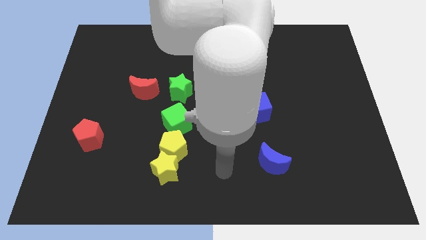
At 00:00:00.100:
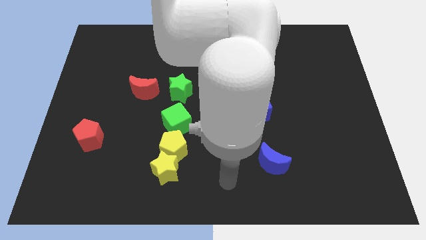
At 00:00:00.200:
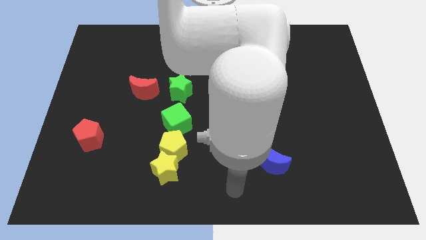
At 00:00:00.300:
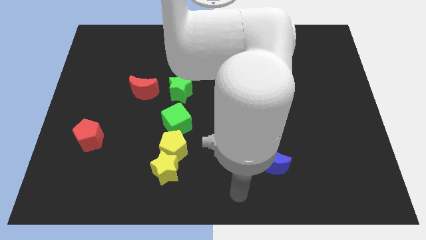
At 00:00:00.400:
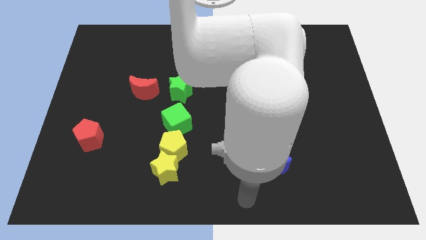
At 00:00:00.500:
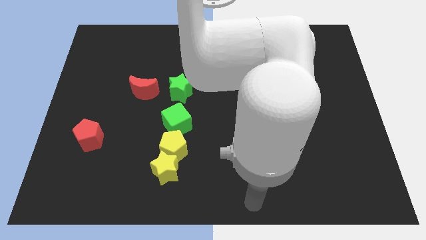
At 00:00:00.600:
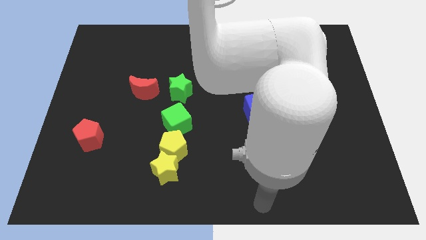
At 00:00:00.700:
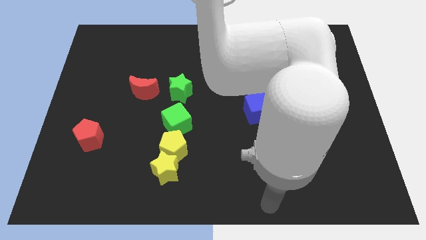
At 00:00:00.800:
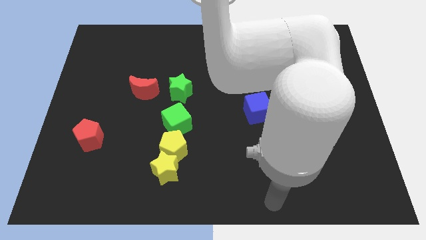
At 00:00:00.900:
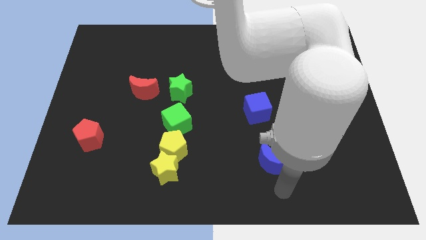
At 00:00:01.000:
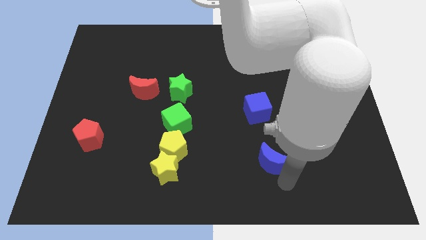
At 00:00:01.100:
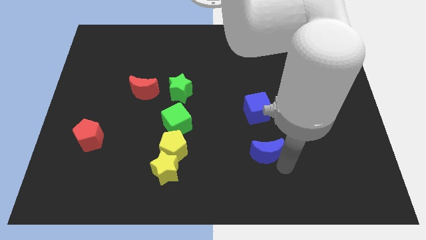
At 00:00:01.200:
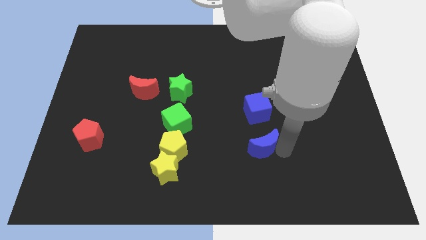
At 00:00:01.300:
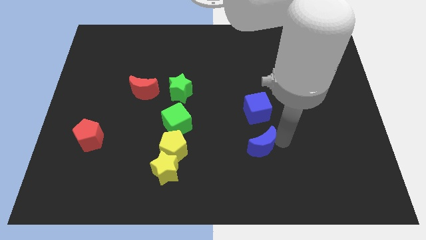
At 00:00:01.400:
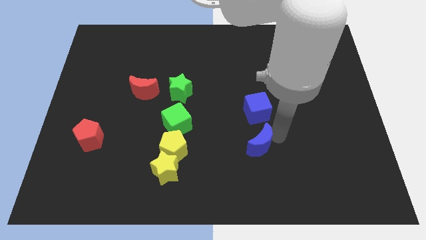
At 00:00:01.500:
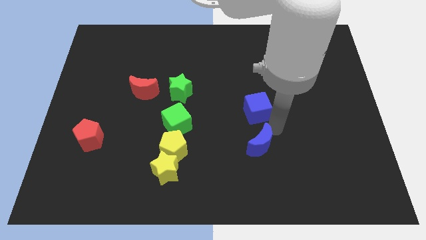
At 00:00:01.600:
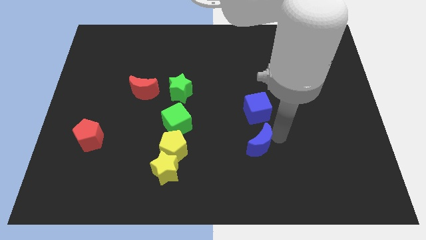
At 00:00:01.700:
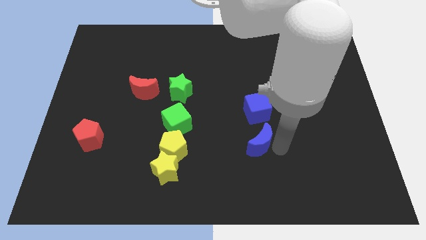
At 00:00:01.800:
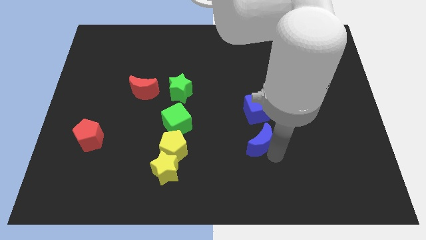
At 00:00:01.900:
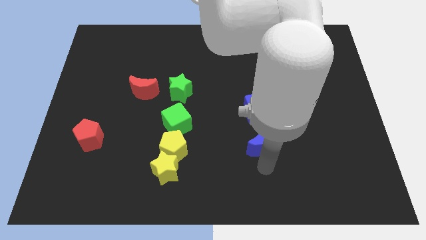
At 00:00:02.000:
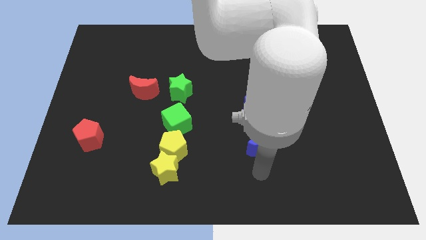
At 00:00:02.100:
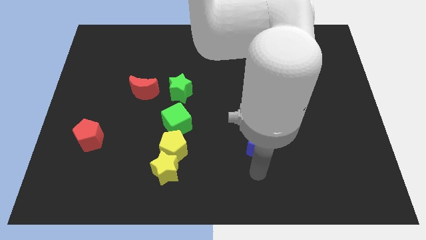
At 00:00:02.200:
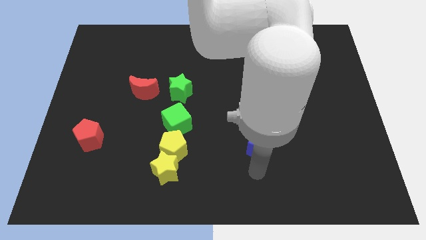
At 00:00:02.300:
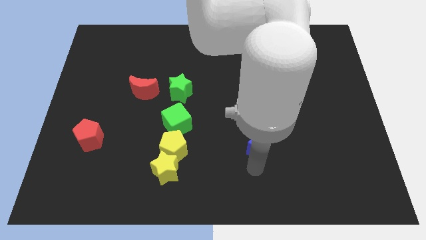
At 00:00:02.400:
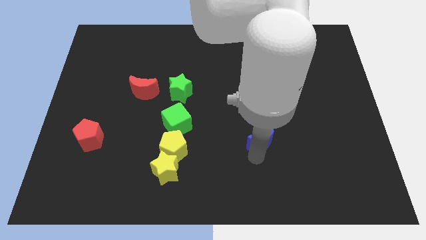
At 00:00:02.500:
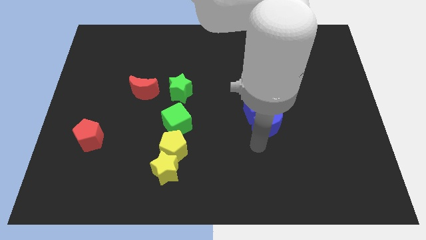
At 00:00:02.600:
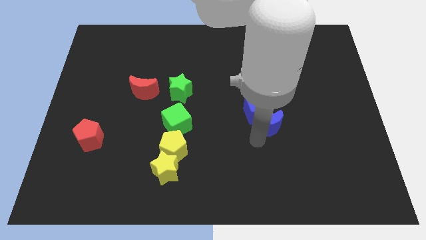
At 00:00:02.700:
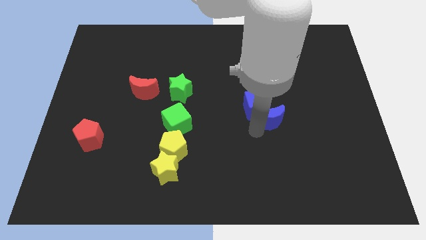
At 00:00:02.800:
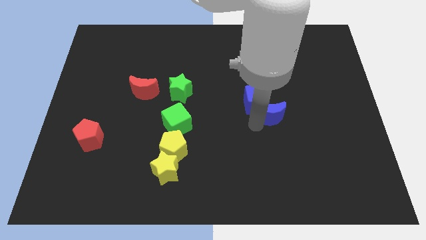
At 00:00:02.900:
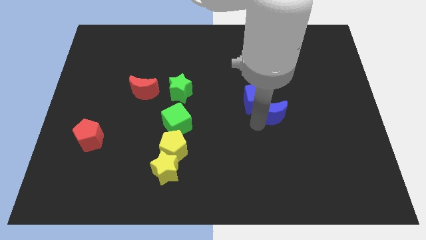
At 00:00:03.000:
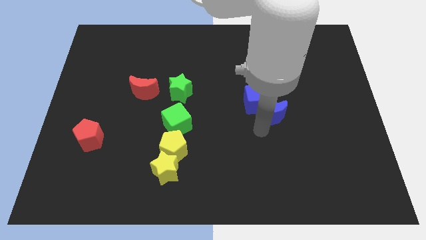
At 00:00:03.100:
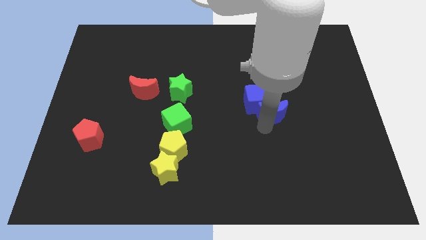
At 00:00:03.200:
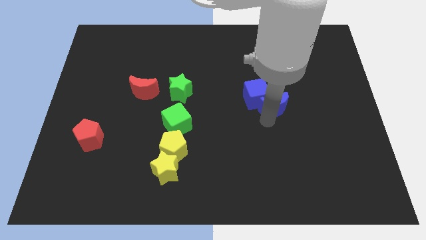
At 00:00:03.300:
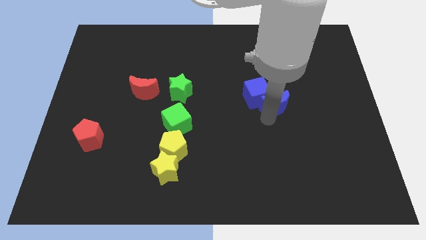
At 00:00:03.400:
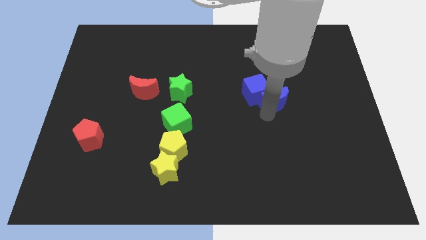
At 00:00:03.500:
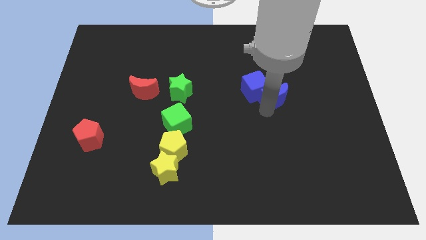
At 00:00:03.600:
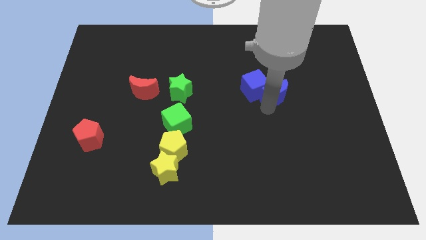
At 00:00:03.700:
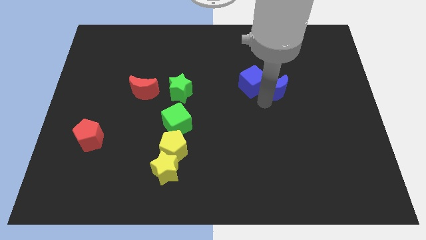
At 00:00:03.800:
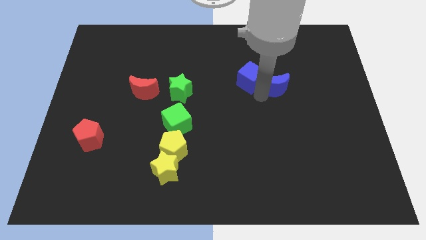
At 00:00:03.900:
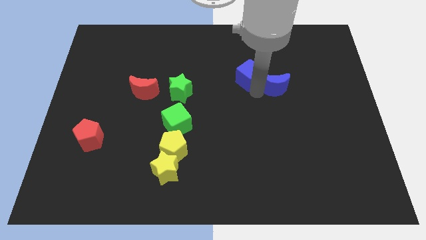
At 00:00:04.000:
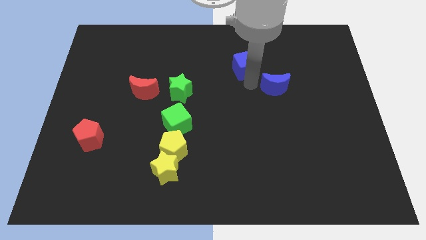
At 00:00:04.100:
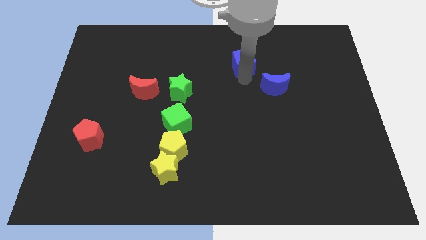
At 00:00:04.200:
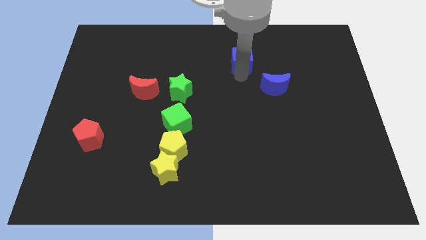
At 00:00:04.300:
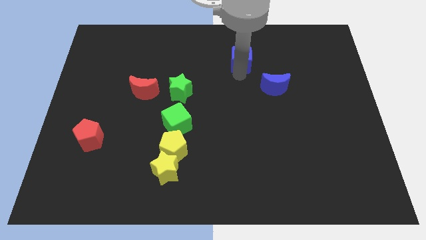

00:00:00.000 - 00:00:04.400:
push the blue cube with the blue moon towards the top centre

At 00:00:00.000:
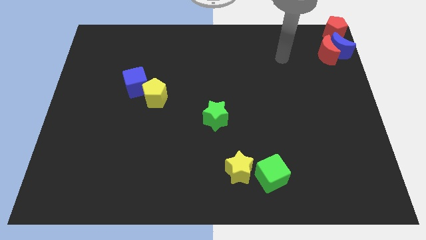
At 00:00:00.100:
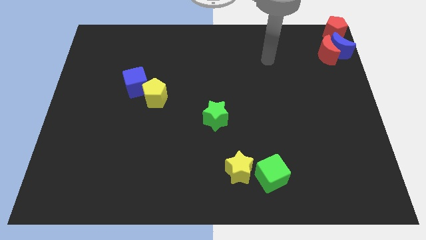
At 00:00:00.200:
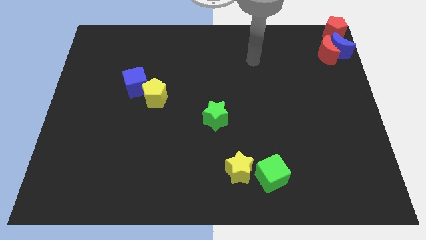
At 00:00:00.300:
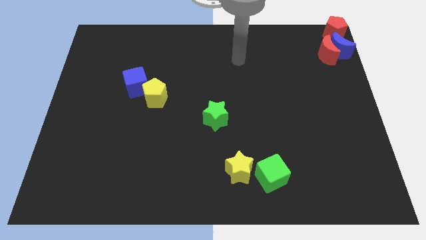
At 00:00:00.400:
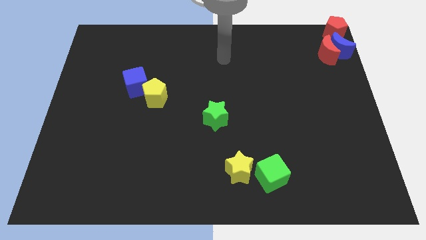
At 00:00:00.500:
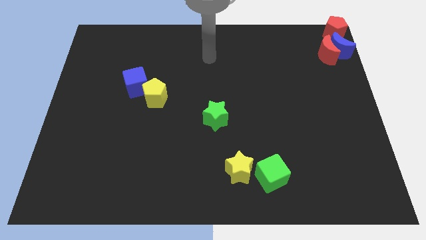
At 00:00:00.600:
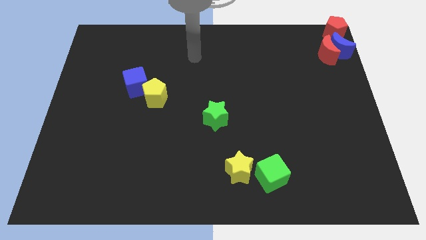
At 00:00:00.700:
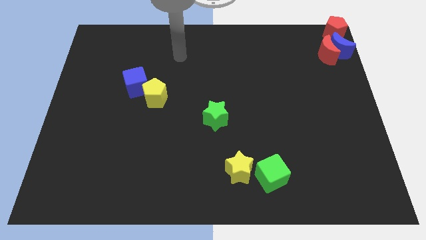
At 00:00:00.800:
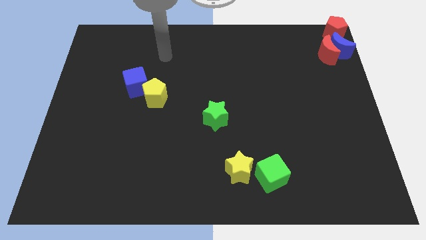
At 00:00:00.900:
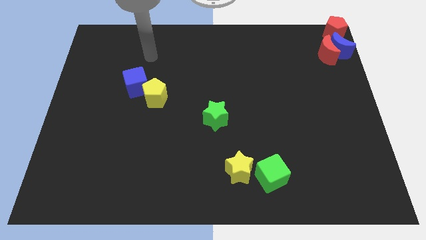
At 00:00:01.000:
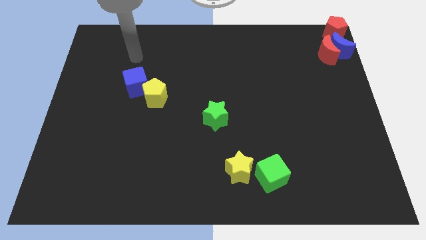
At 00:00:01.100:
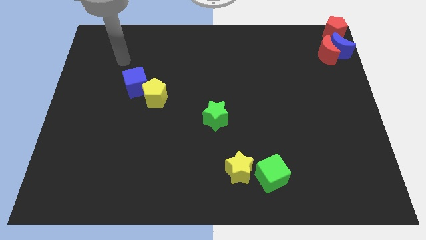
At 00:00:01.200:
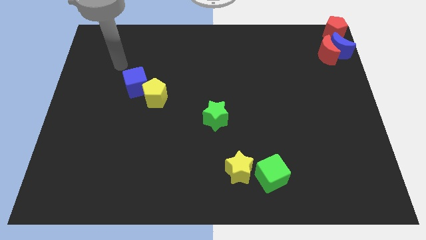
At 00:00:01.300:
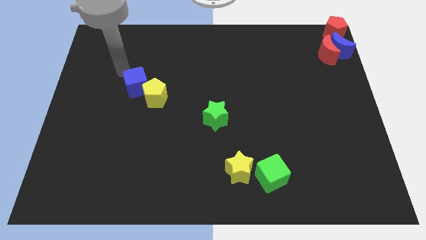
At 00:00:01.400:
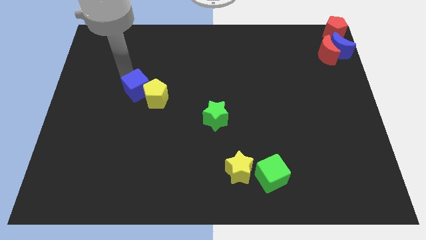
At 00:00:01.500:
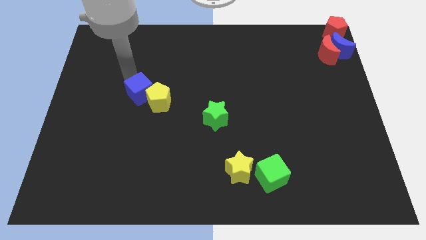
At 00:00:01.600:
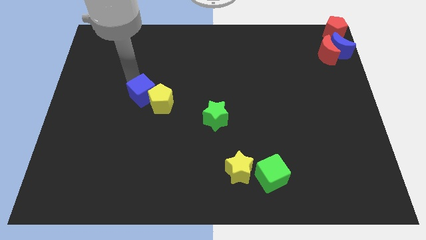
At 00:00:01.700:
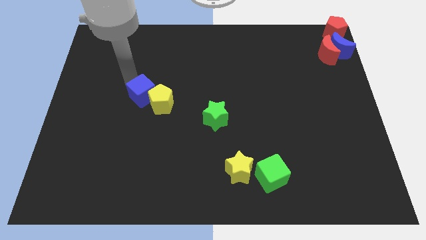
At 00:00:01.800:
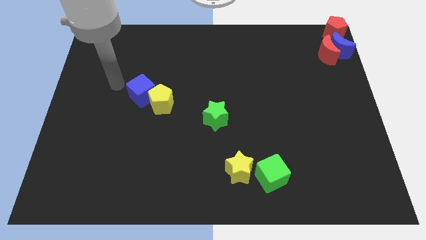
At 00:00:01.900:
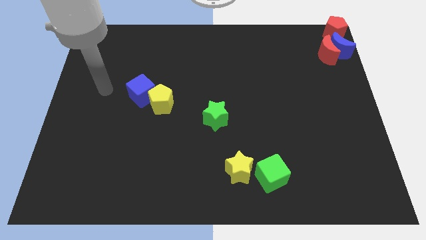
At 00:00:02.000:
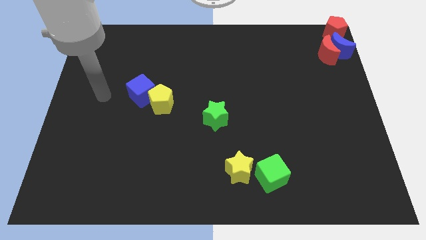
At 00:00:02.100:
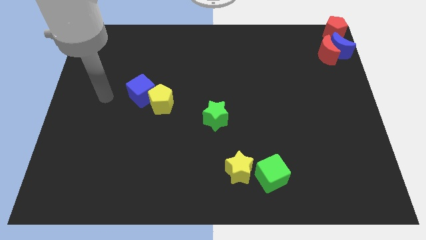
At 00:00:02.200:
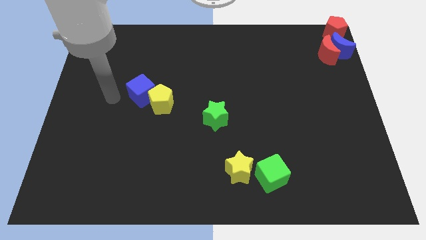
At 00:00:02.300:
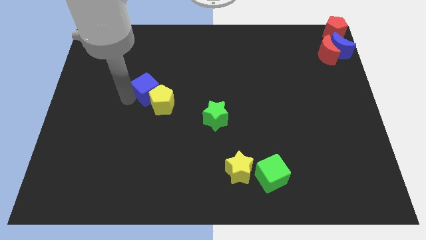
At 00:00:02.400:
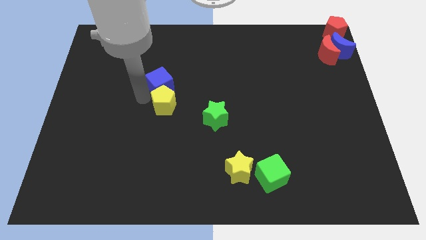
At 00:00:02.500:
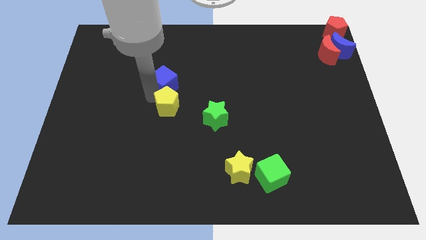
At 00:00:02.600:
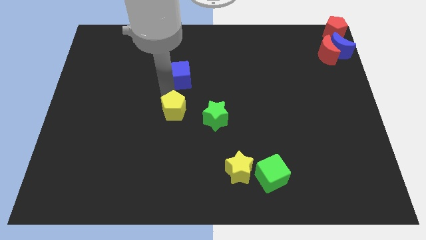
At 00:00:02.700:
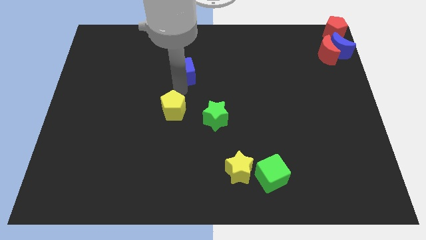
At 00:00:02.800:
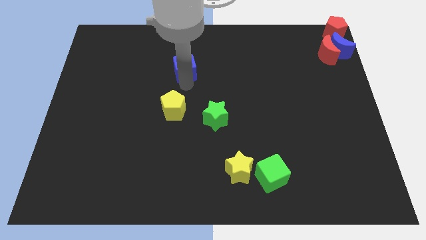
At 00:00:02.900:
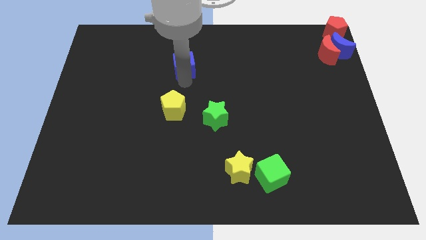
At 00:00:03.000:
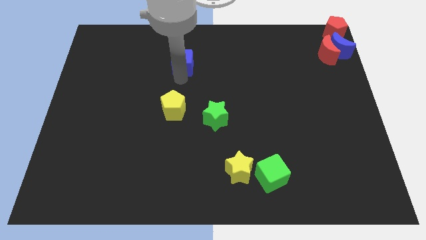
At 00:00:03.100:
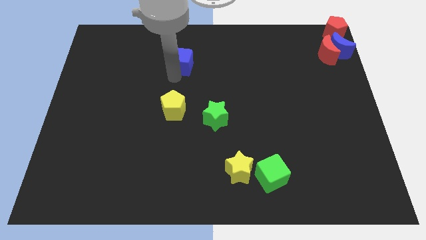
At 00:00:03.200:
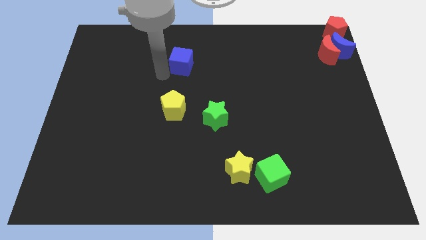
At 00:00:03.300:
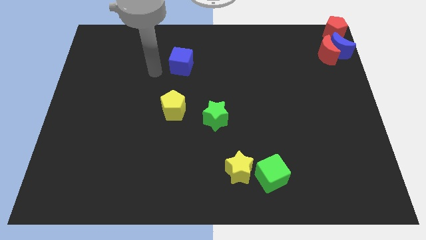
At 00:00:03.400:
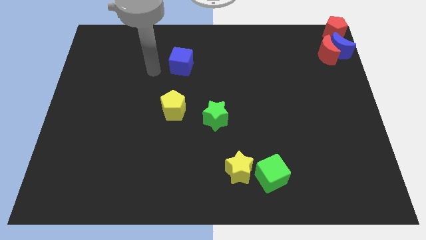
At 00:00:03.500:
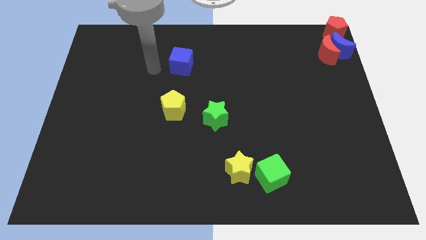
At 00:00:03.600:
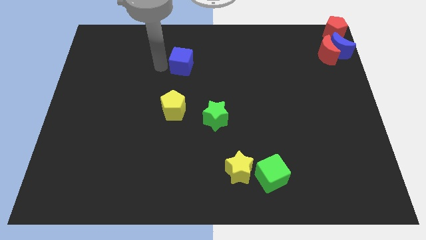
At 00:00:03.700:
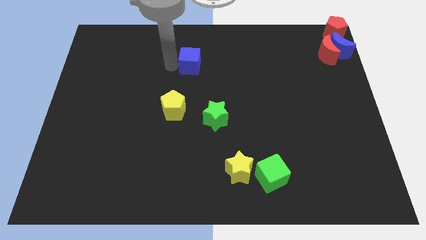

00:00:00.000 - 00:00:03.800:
push the blue cube towards the top of the board

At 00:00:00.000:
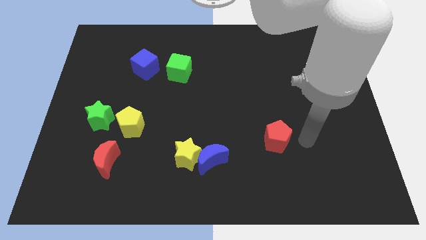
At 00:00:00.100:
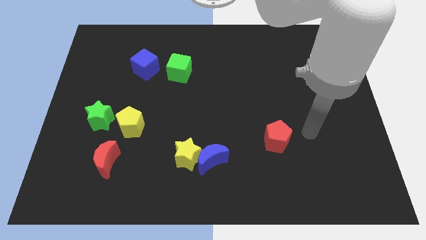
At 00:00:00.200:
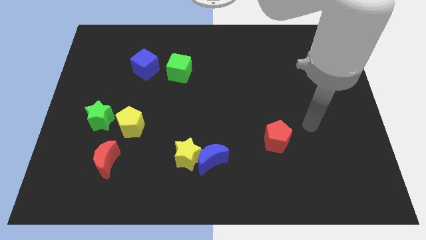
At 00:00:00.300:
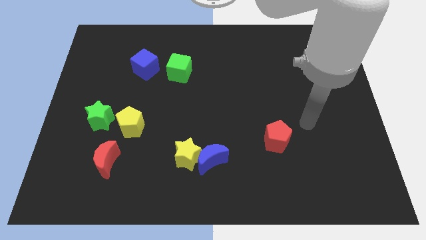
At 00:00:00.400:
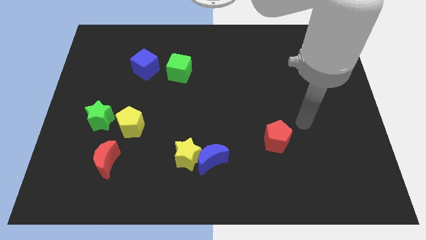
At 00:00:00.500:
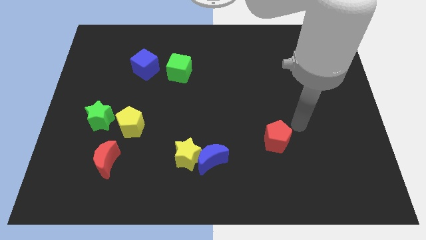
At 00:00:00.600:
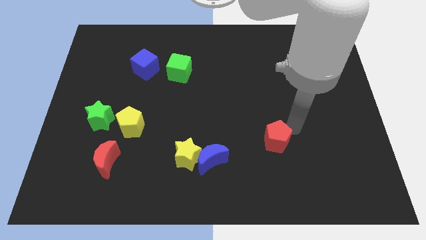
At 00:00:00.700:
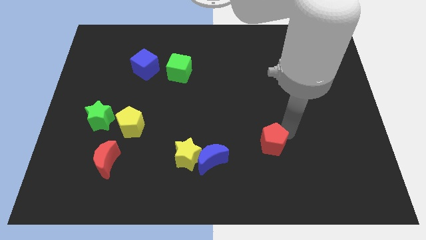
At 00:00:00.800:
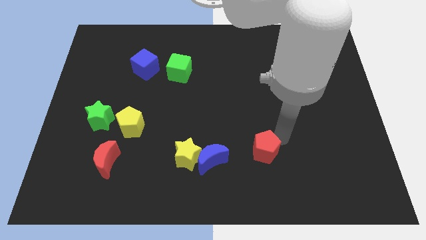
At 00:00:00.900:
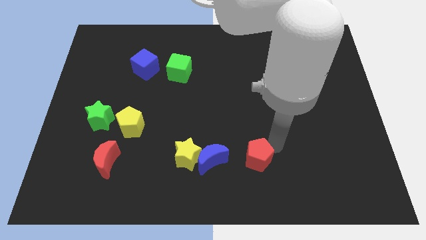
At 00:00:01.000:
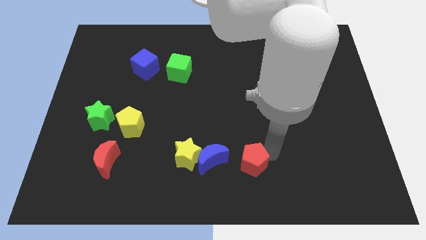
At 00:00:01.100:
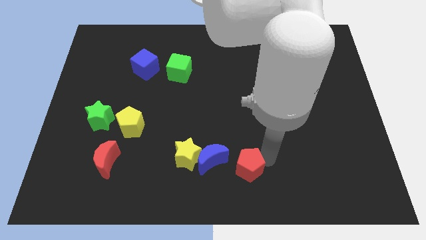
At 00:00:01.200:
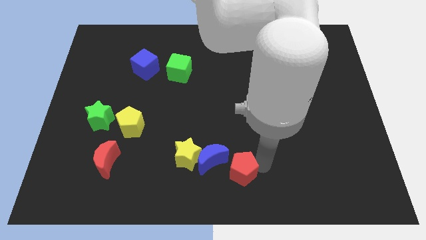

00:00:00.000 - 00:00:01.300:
place the red pentagon to the right side of the blue crescent
